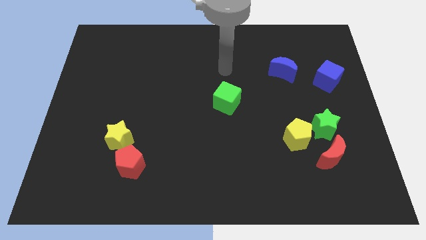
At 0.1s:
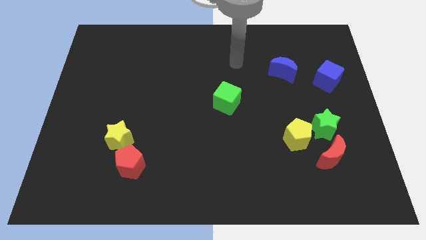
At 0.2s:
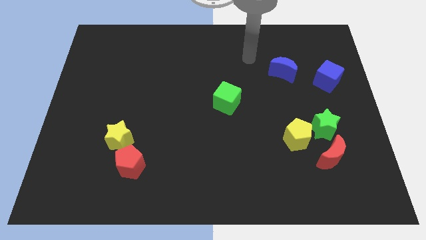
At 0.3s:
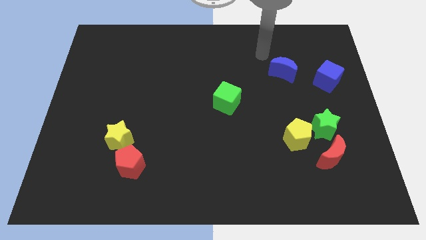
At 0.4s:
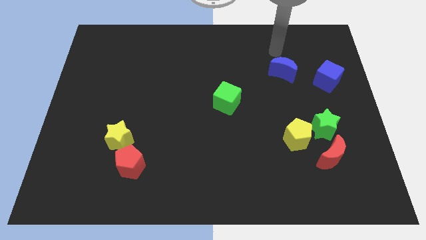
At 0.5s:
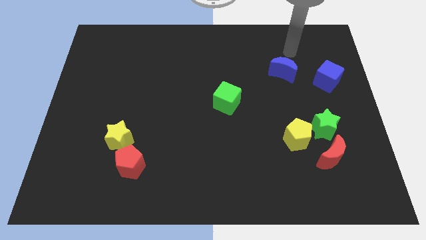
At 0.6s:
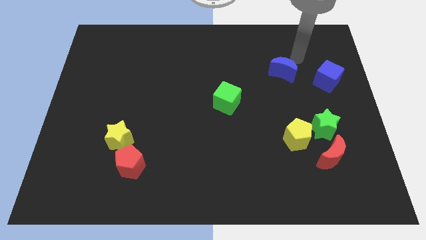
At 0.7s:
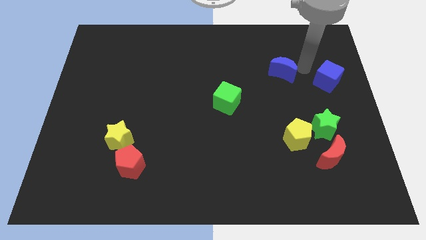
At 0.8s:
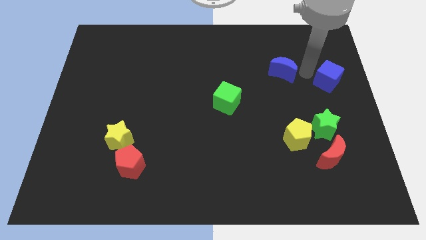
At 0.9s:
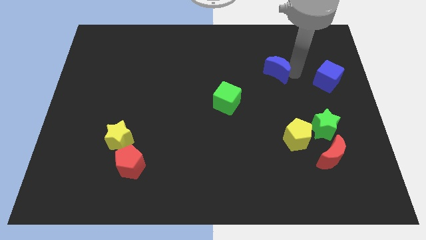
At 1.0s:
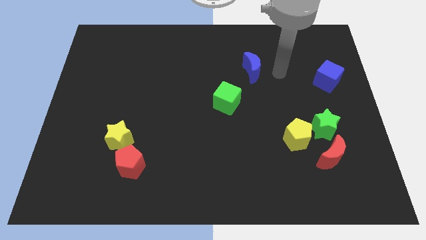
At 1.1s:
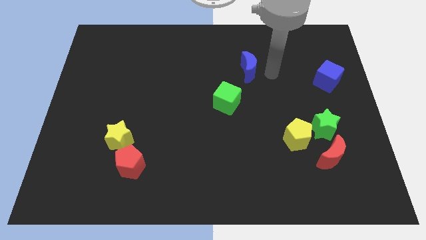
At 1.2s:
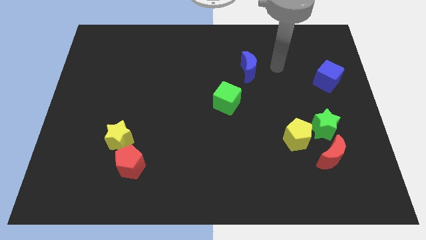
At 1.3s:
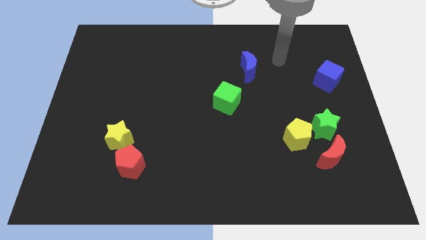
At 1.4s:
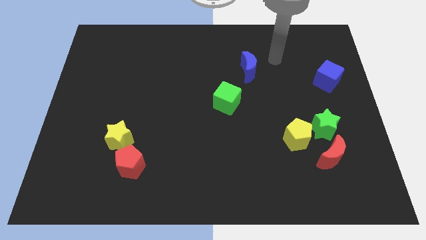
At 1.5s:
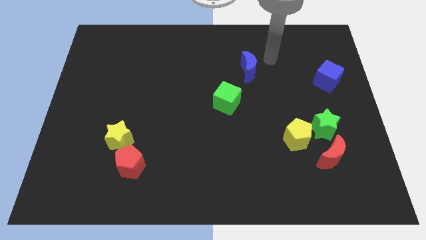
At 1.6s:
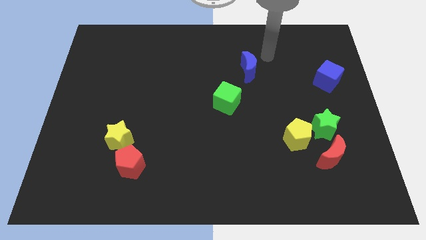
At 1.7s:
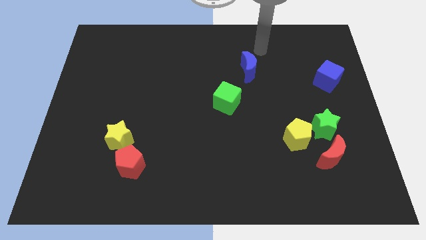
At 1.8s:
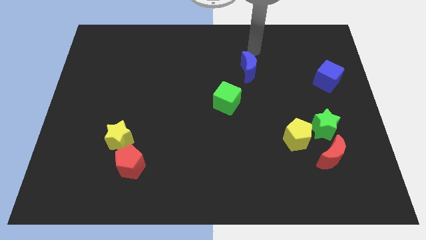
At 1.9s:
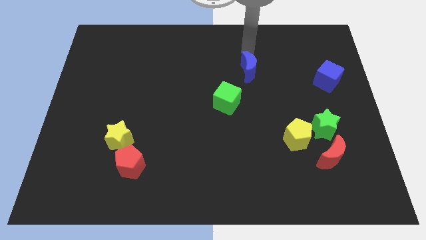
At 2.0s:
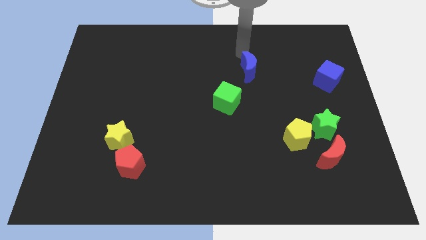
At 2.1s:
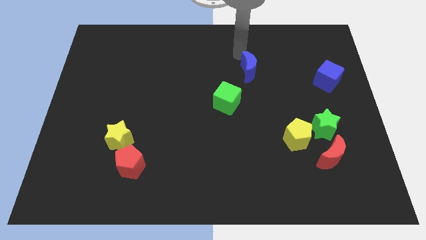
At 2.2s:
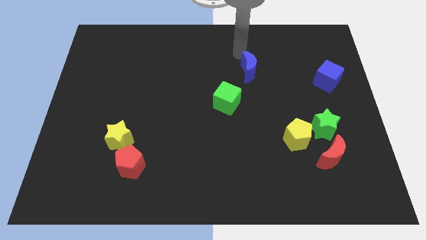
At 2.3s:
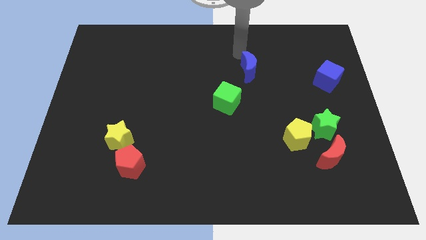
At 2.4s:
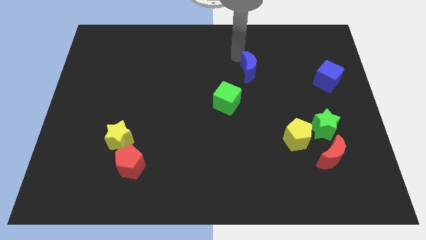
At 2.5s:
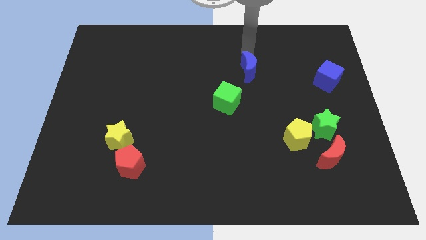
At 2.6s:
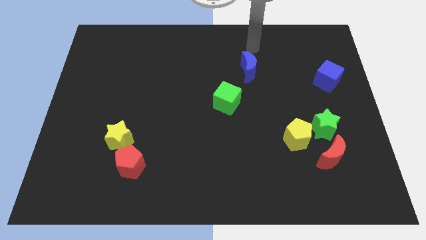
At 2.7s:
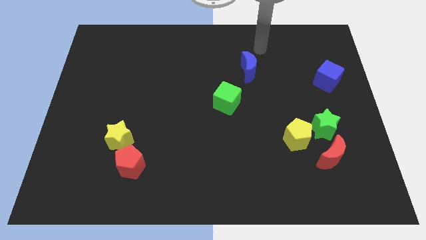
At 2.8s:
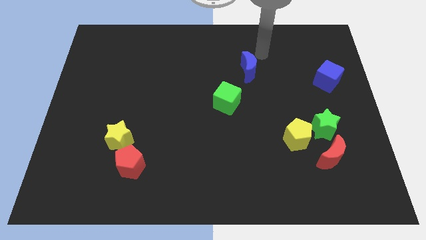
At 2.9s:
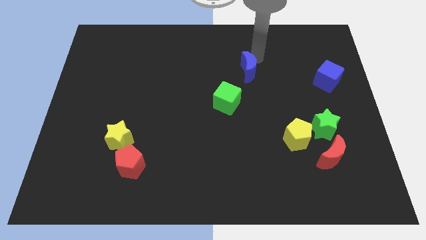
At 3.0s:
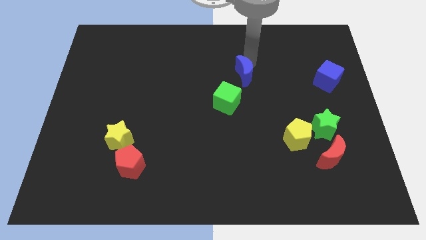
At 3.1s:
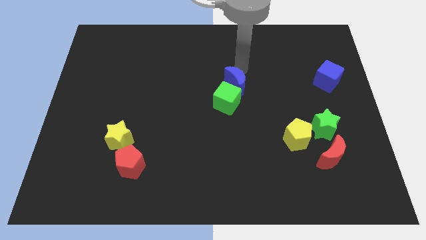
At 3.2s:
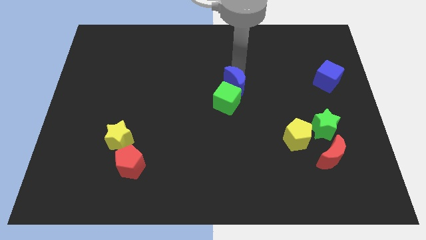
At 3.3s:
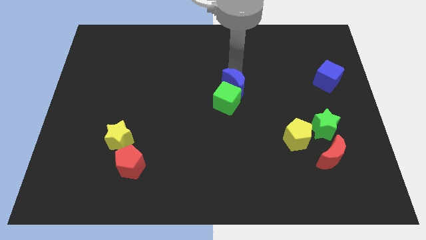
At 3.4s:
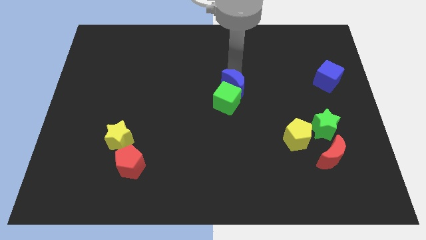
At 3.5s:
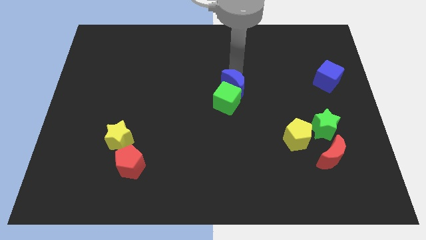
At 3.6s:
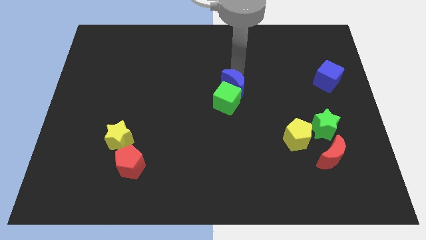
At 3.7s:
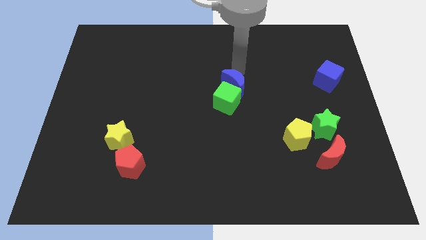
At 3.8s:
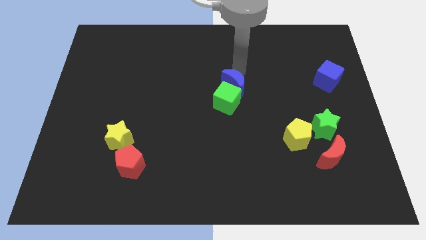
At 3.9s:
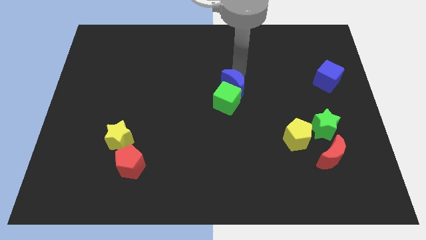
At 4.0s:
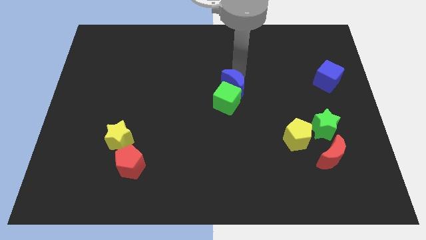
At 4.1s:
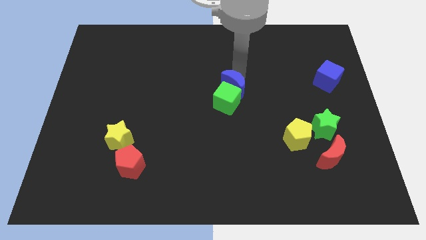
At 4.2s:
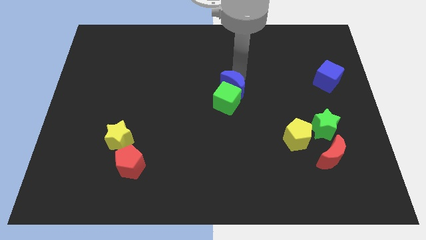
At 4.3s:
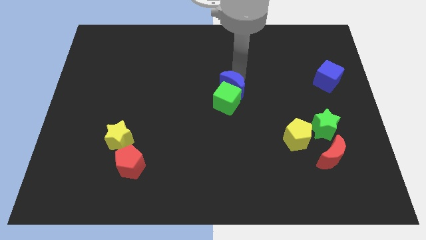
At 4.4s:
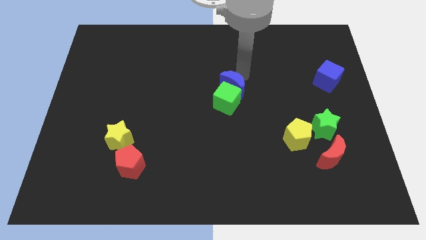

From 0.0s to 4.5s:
place the blue moon above the green cube

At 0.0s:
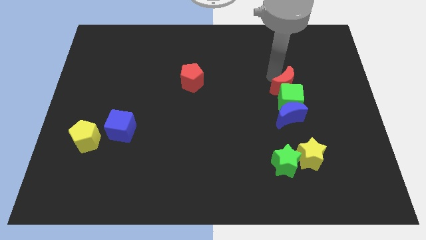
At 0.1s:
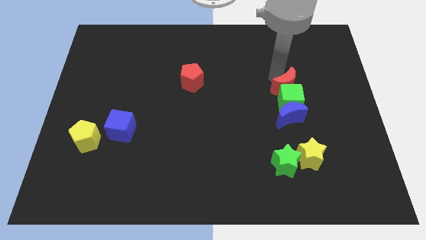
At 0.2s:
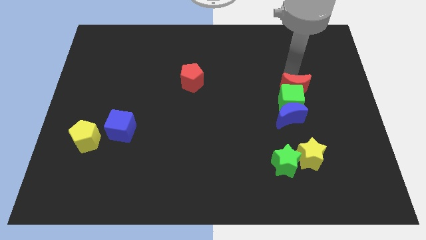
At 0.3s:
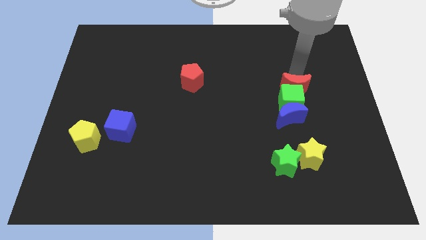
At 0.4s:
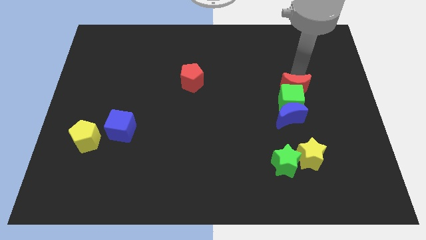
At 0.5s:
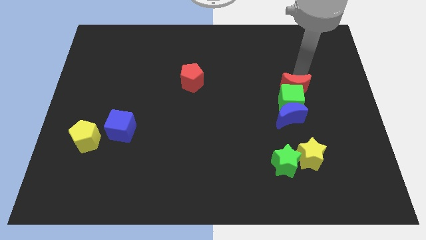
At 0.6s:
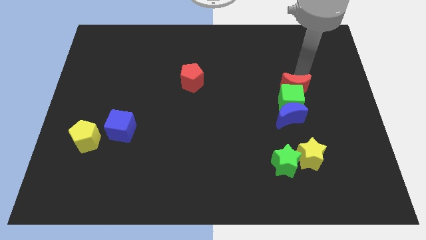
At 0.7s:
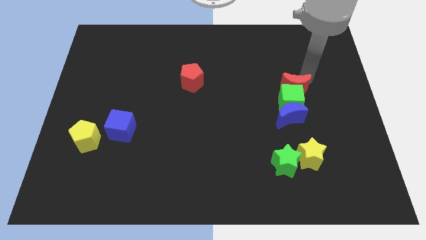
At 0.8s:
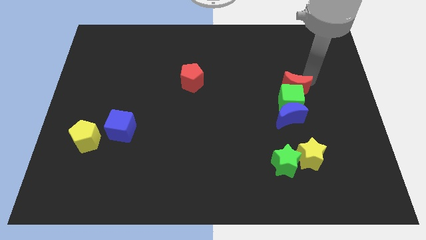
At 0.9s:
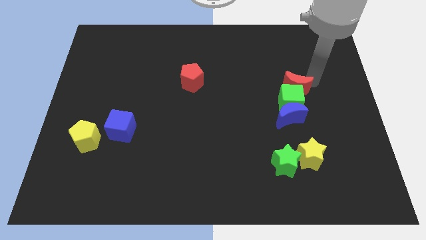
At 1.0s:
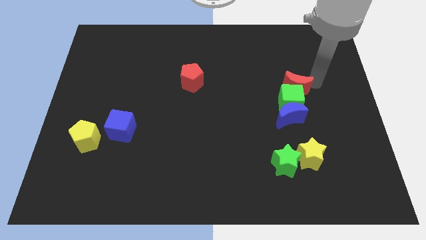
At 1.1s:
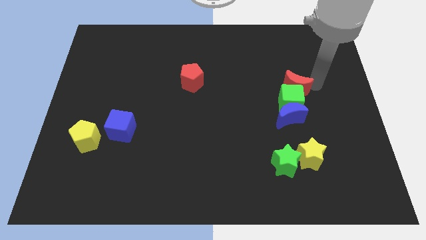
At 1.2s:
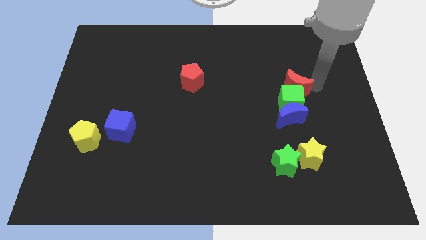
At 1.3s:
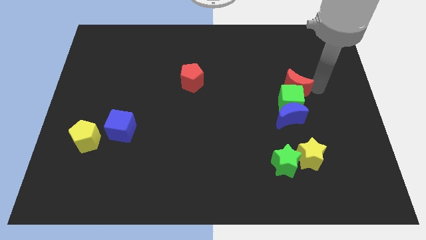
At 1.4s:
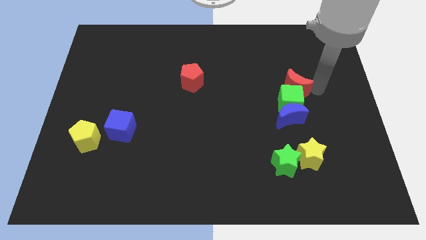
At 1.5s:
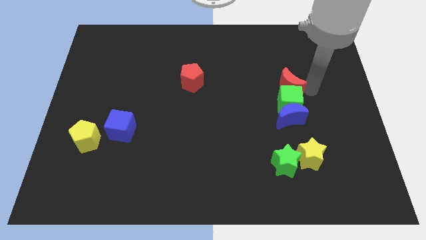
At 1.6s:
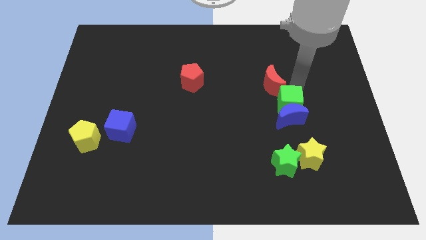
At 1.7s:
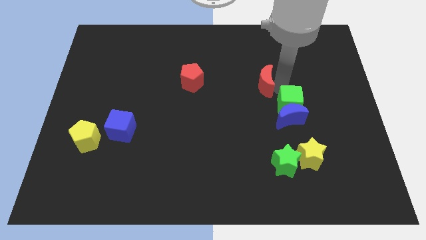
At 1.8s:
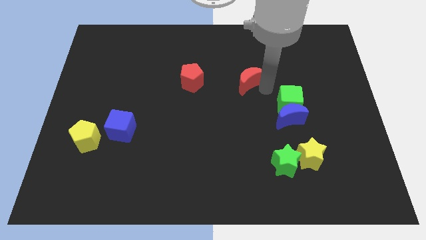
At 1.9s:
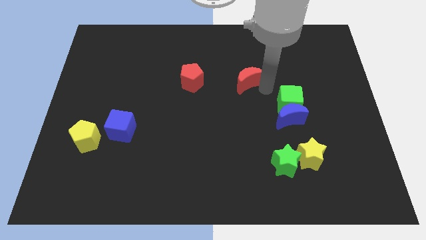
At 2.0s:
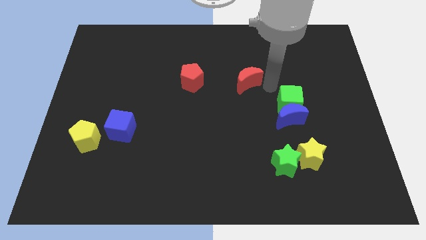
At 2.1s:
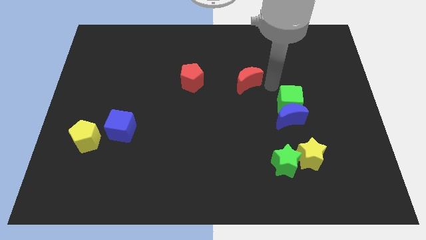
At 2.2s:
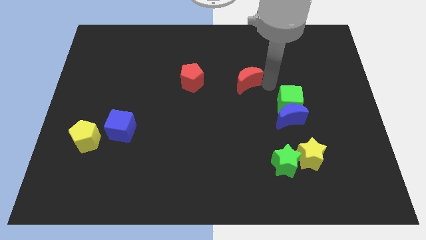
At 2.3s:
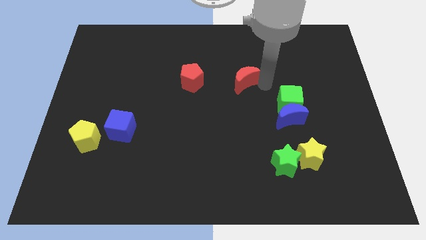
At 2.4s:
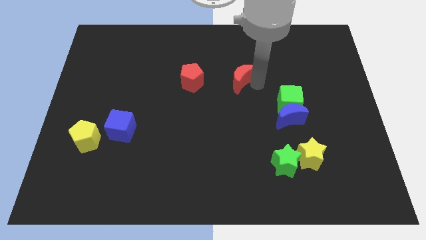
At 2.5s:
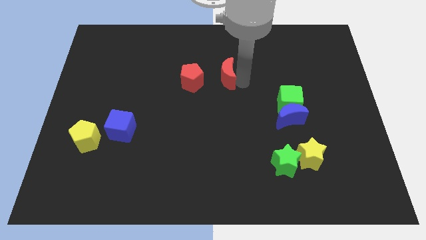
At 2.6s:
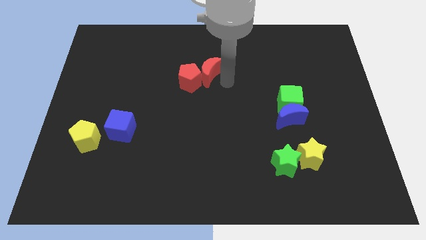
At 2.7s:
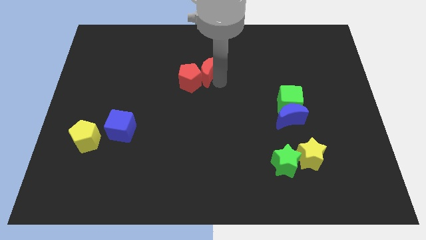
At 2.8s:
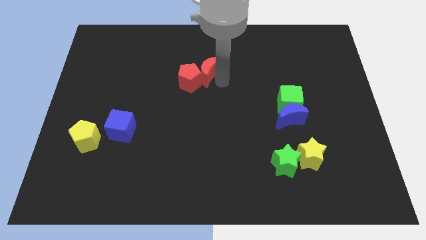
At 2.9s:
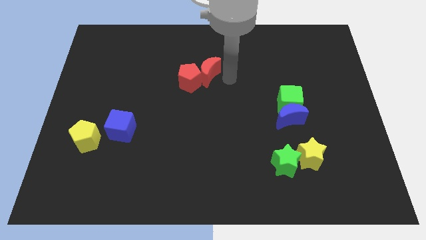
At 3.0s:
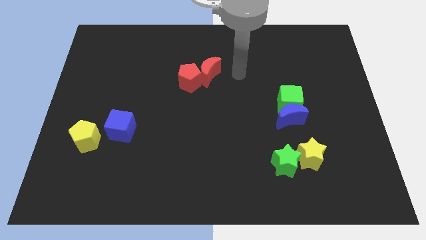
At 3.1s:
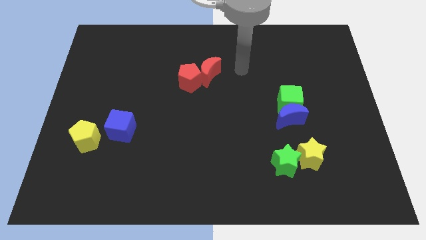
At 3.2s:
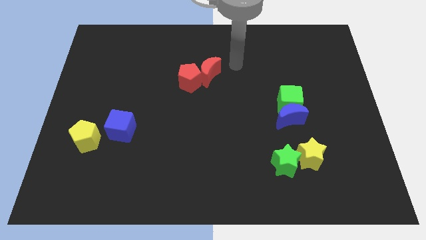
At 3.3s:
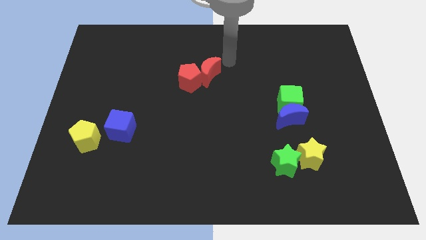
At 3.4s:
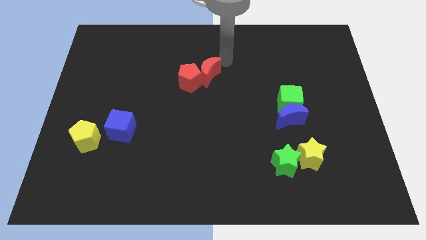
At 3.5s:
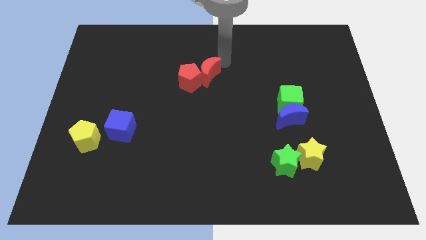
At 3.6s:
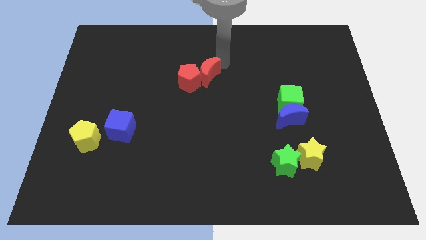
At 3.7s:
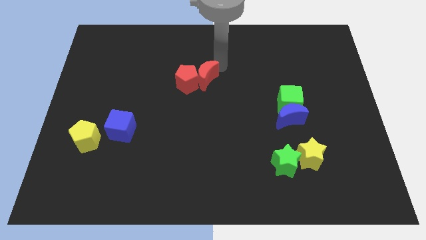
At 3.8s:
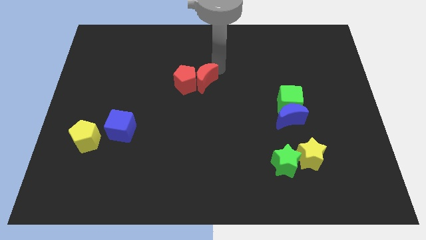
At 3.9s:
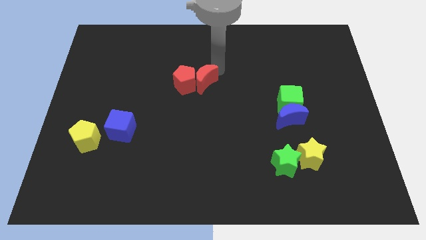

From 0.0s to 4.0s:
place red moon adjacent to red pentagon

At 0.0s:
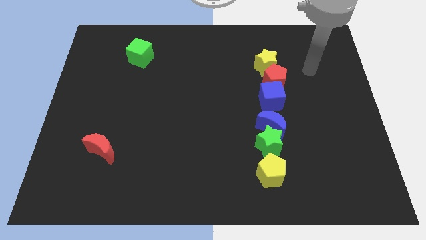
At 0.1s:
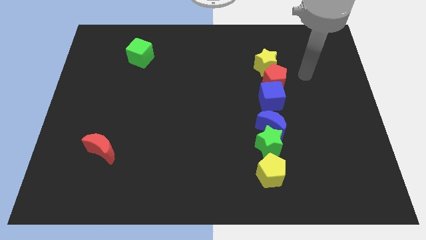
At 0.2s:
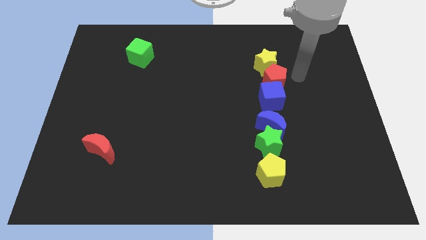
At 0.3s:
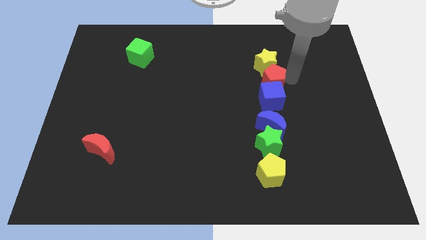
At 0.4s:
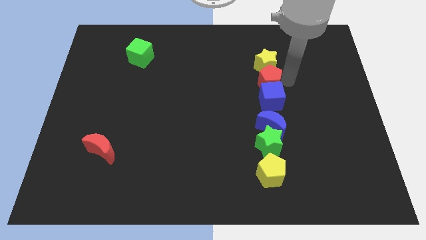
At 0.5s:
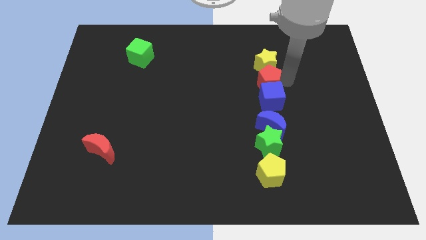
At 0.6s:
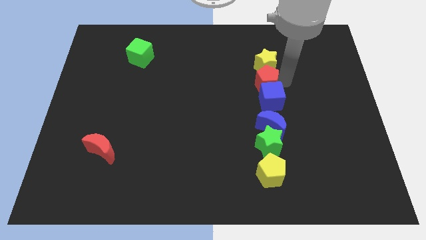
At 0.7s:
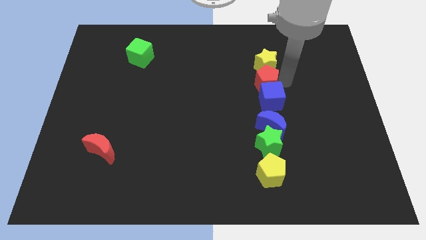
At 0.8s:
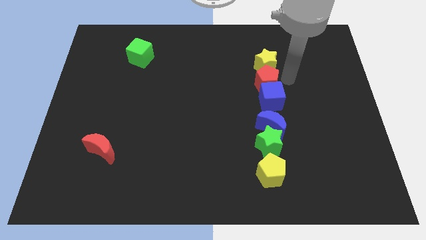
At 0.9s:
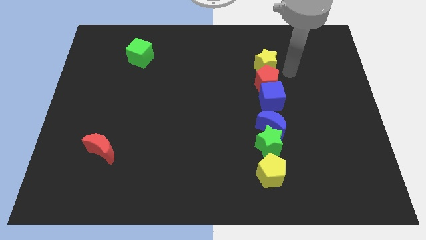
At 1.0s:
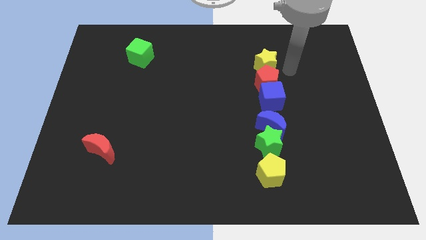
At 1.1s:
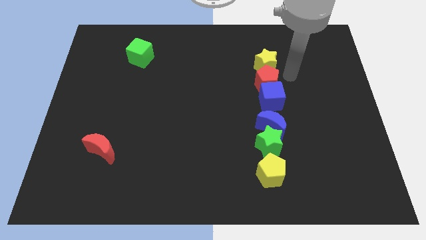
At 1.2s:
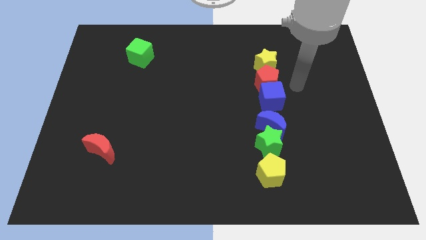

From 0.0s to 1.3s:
adjust red pentagon in a line
